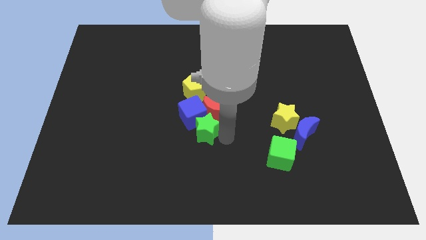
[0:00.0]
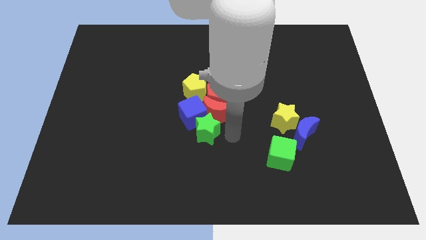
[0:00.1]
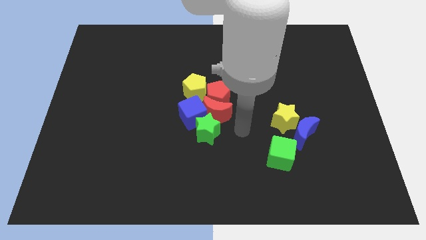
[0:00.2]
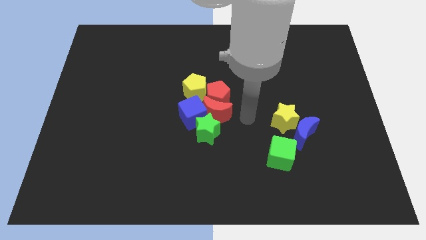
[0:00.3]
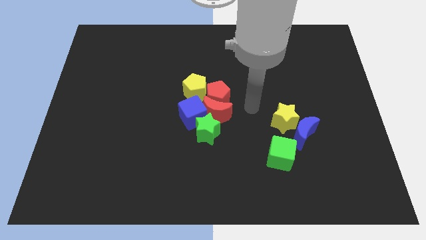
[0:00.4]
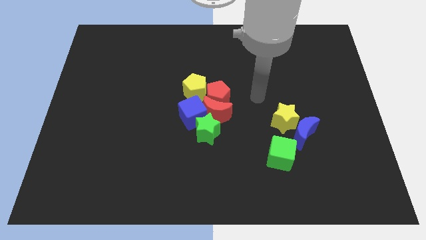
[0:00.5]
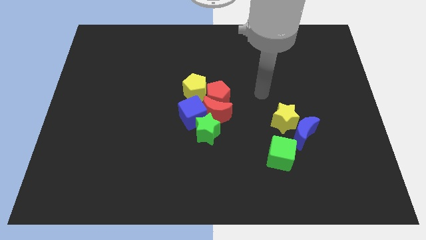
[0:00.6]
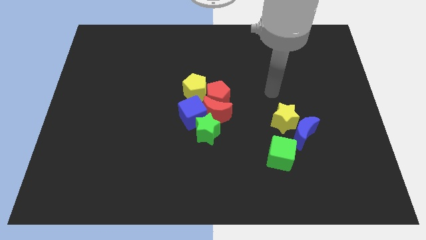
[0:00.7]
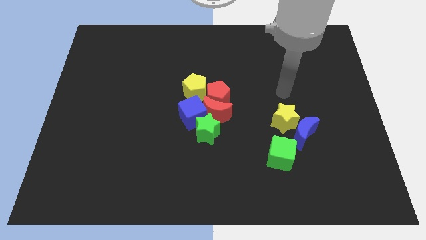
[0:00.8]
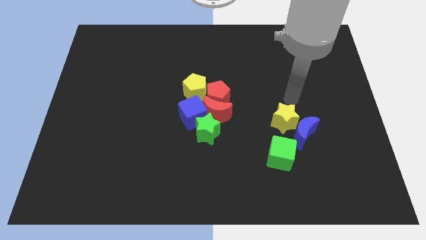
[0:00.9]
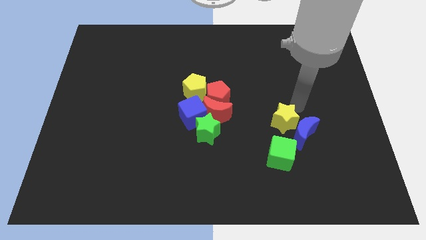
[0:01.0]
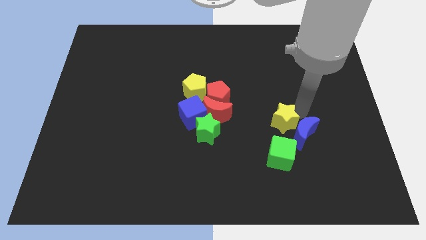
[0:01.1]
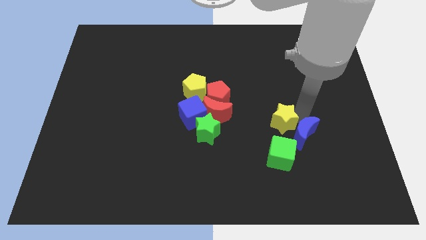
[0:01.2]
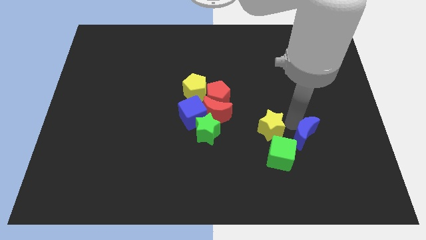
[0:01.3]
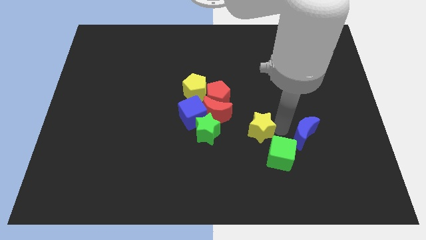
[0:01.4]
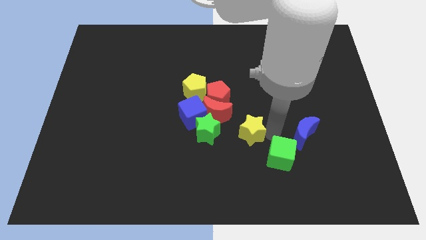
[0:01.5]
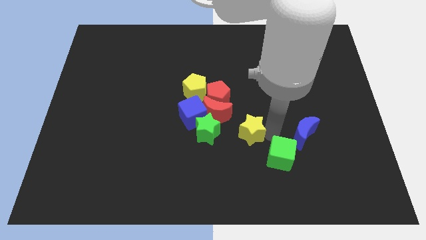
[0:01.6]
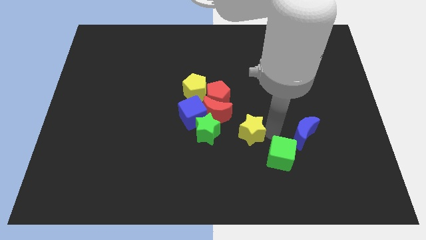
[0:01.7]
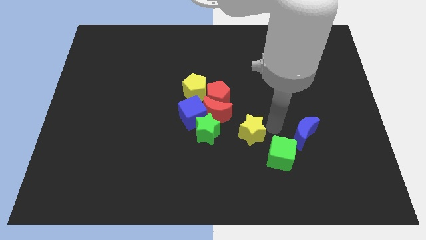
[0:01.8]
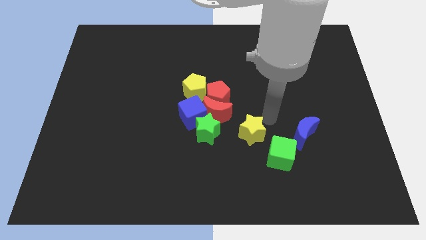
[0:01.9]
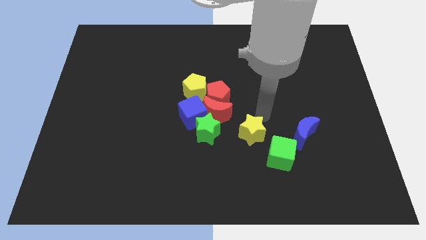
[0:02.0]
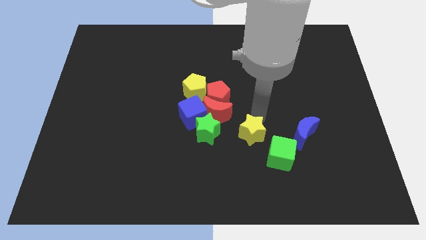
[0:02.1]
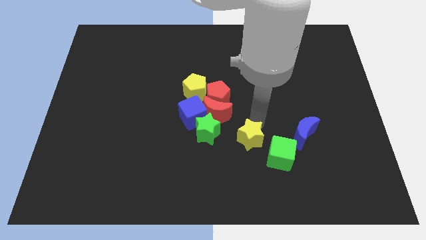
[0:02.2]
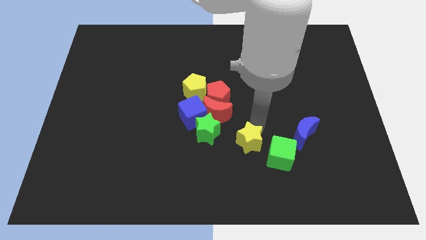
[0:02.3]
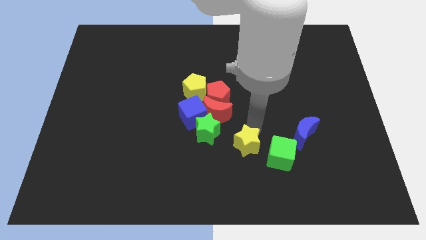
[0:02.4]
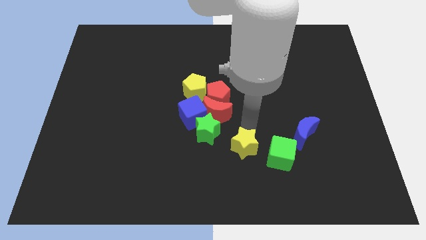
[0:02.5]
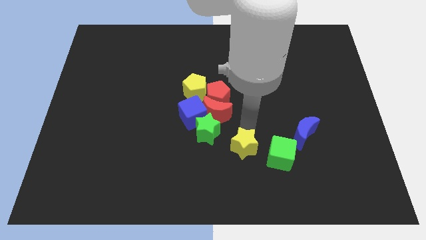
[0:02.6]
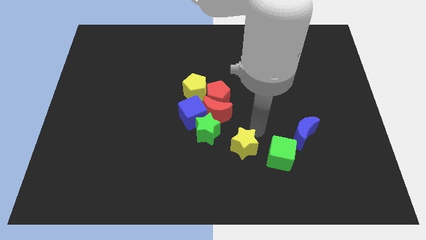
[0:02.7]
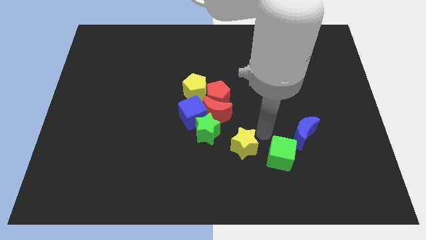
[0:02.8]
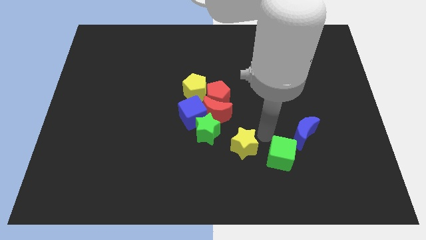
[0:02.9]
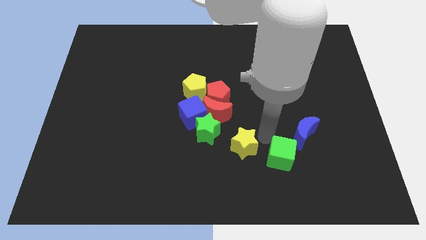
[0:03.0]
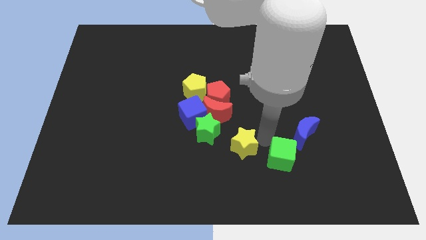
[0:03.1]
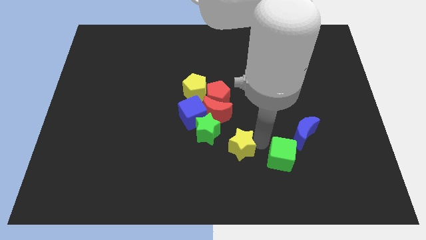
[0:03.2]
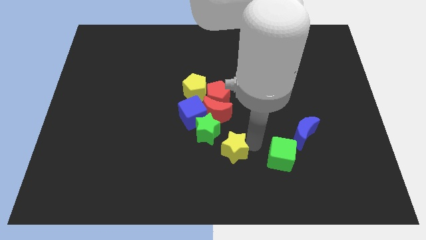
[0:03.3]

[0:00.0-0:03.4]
place the yellow star in between green star and cube

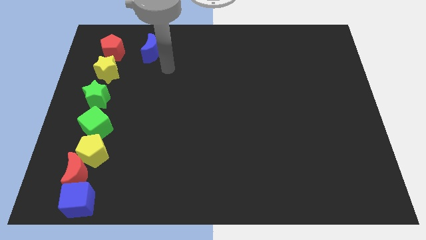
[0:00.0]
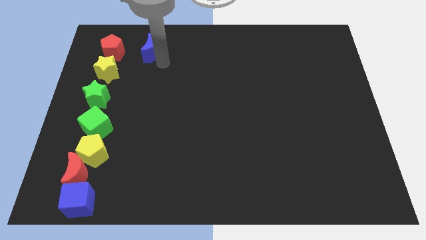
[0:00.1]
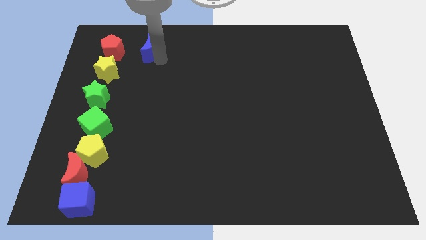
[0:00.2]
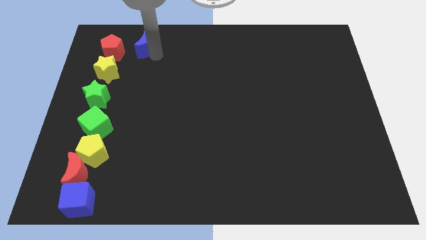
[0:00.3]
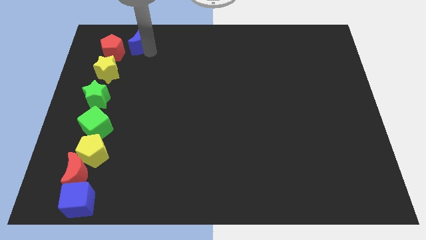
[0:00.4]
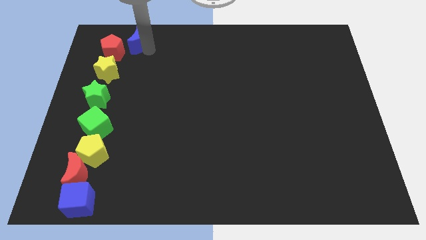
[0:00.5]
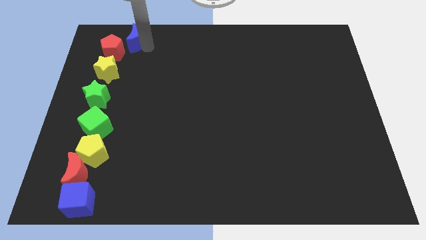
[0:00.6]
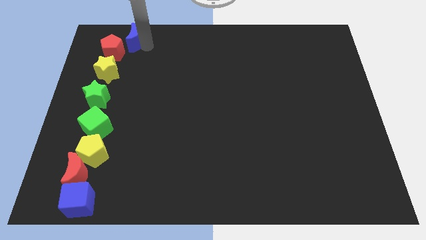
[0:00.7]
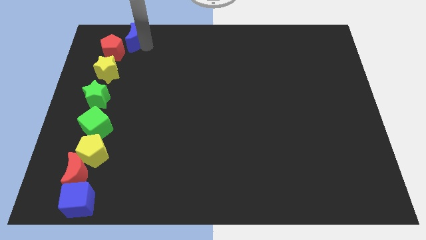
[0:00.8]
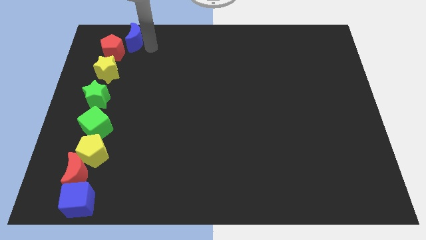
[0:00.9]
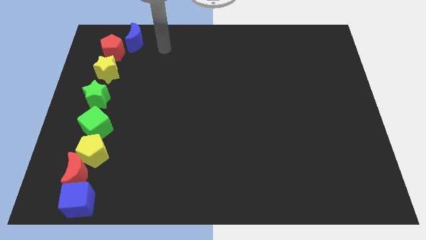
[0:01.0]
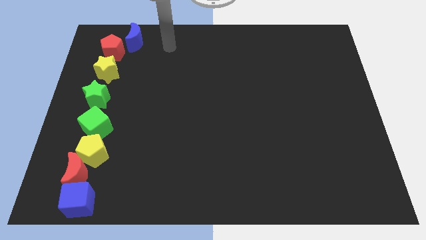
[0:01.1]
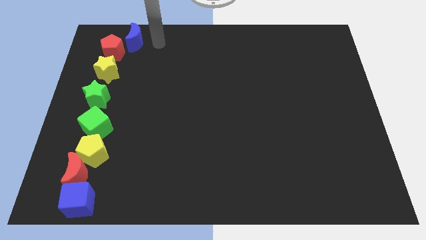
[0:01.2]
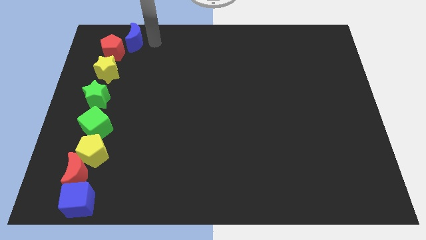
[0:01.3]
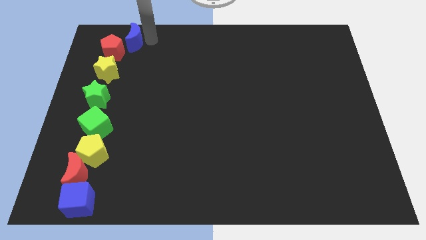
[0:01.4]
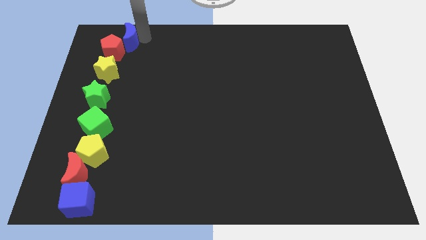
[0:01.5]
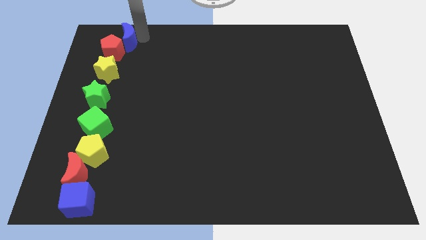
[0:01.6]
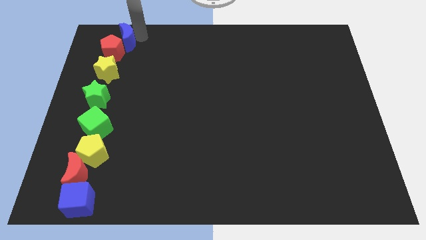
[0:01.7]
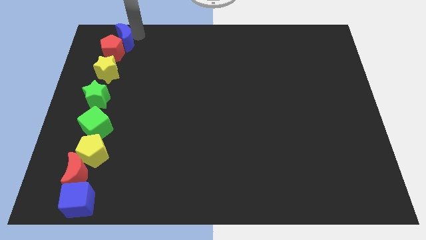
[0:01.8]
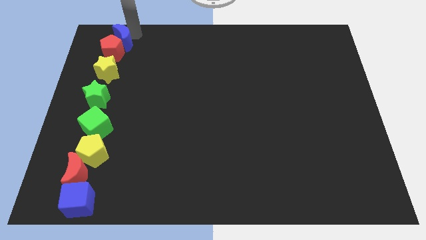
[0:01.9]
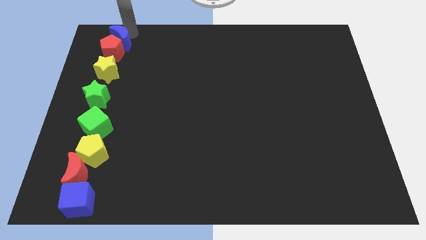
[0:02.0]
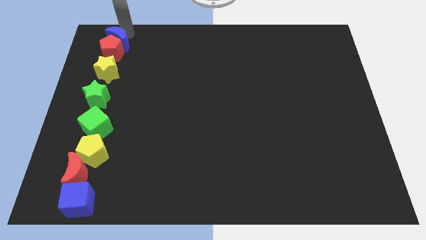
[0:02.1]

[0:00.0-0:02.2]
place the blue crescent at the top of red pentagon

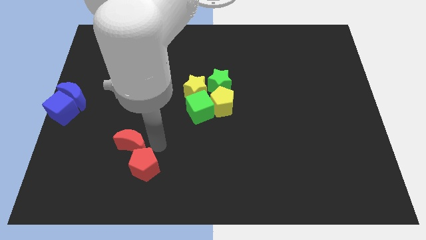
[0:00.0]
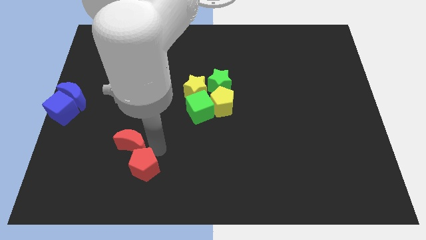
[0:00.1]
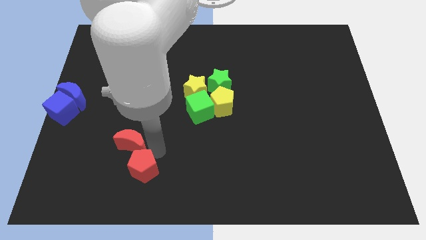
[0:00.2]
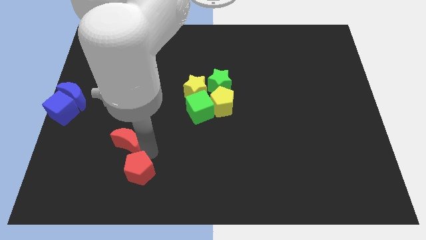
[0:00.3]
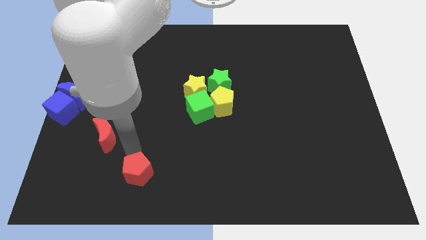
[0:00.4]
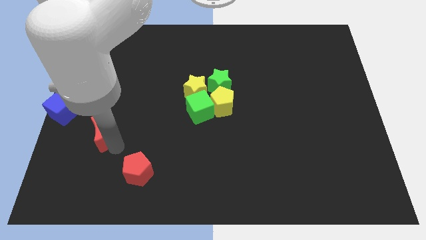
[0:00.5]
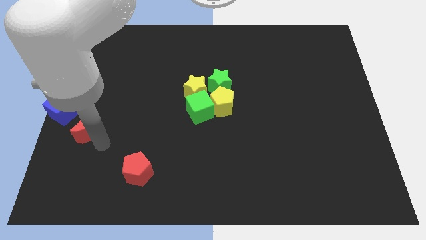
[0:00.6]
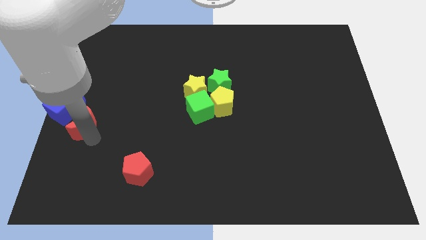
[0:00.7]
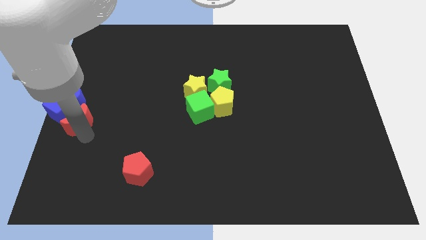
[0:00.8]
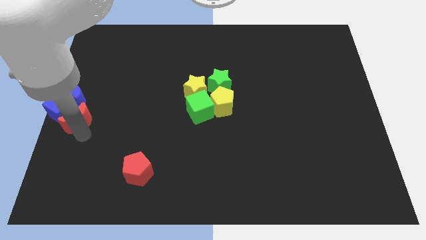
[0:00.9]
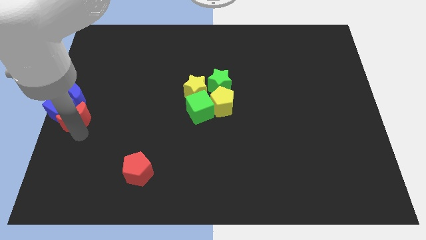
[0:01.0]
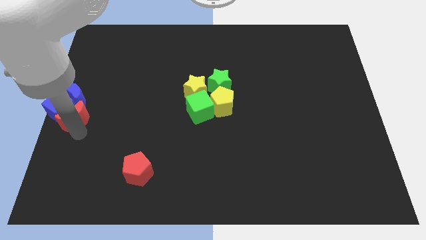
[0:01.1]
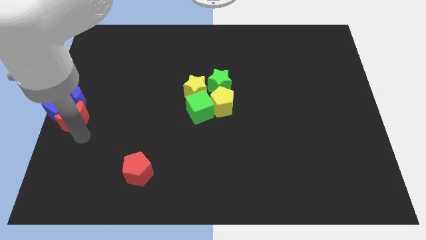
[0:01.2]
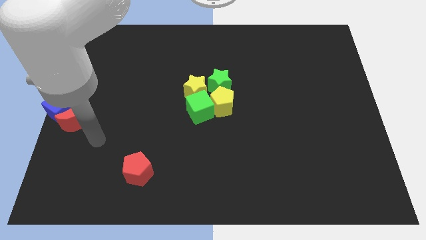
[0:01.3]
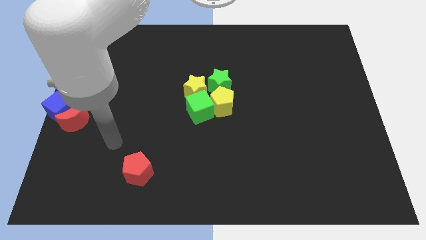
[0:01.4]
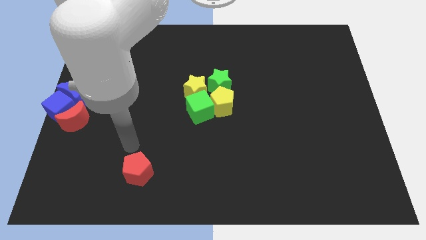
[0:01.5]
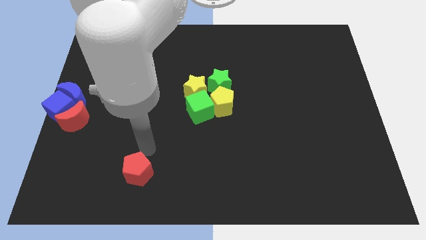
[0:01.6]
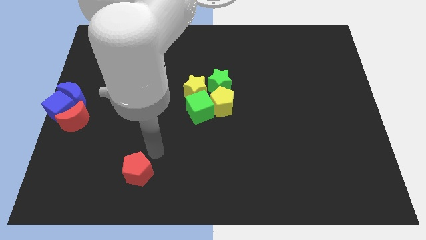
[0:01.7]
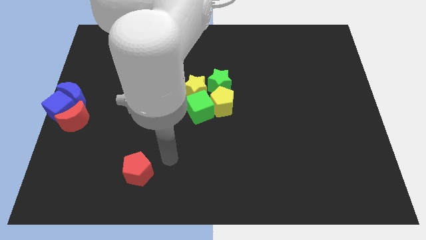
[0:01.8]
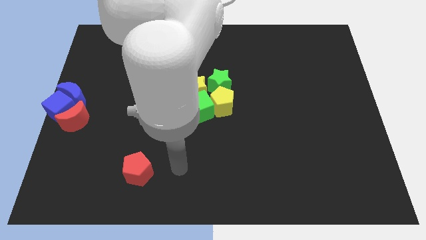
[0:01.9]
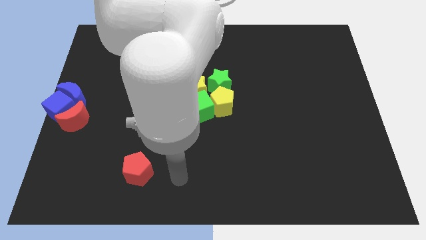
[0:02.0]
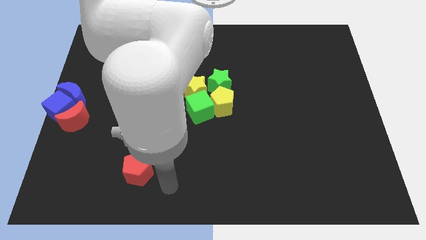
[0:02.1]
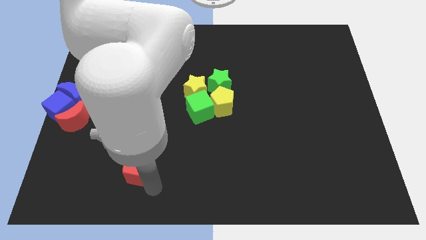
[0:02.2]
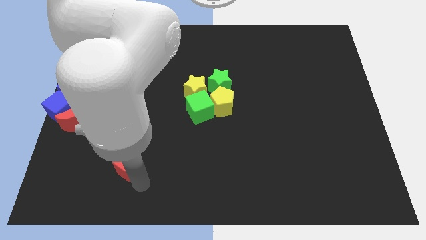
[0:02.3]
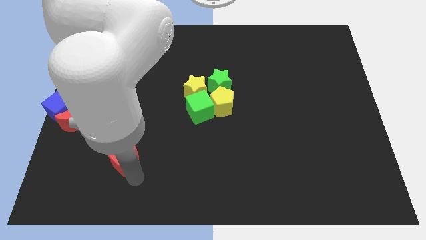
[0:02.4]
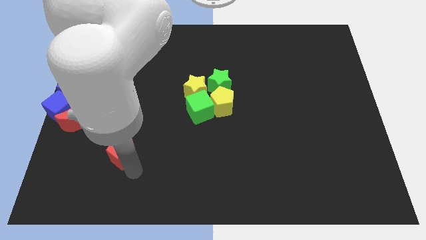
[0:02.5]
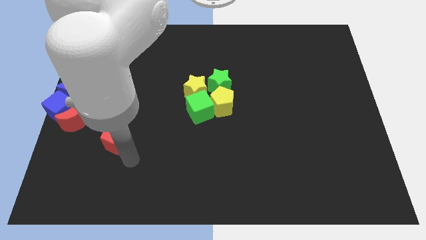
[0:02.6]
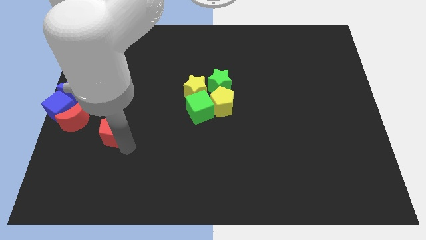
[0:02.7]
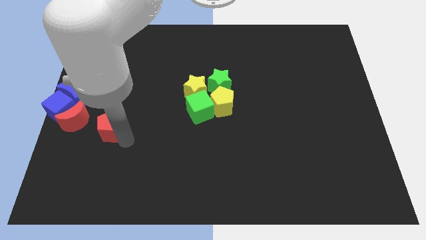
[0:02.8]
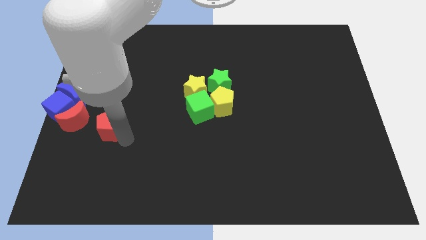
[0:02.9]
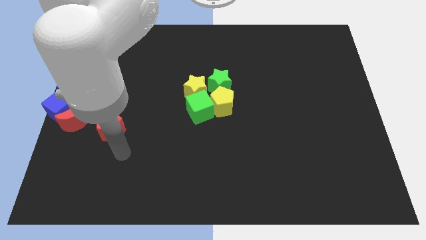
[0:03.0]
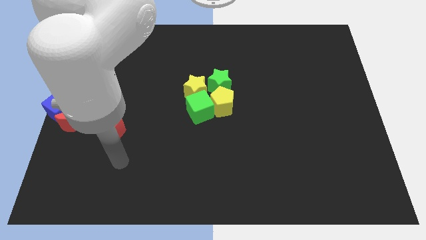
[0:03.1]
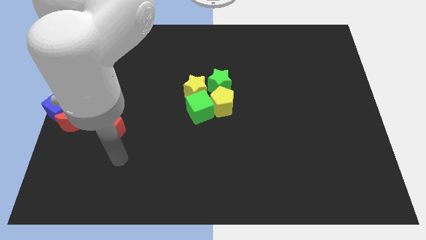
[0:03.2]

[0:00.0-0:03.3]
push the red crescent towards the blue cube
